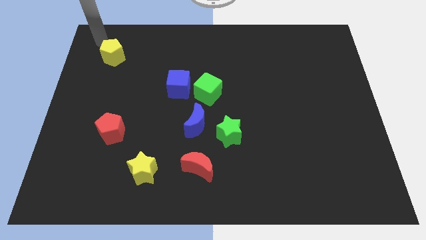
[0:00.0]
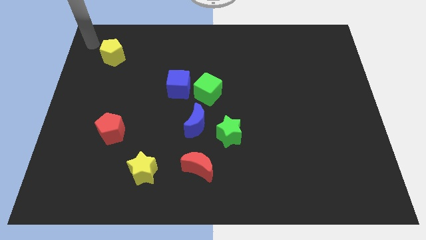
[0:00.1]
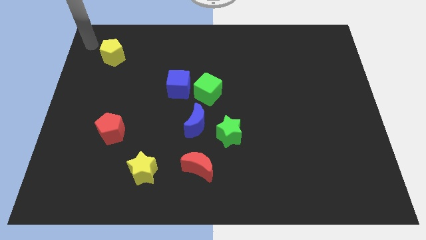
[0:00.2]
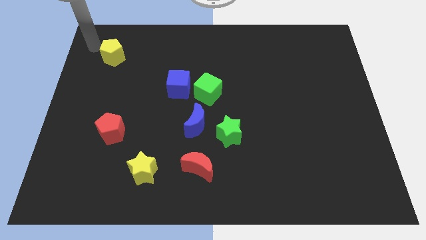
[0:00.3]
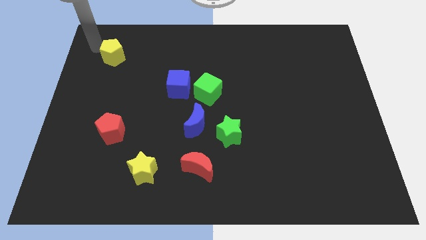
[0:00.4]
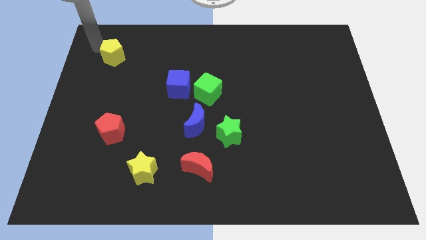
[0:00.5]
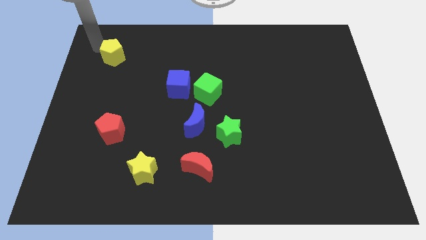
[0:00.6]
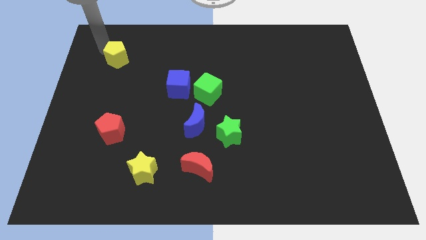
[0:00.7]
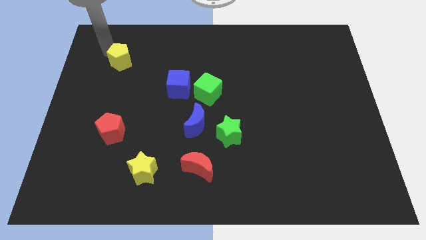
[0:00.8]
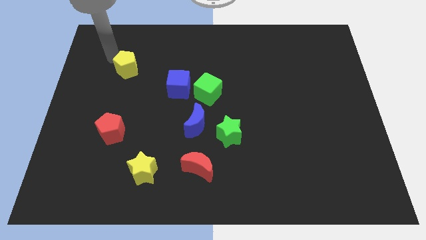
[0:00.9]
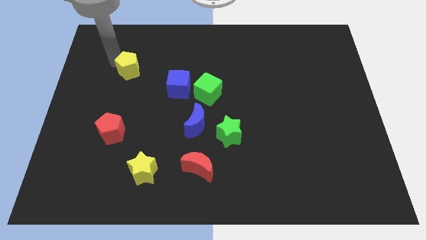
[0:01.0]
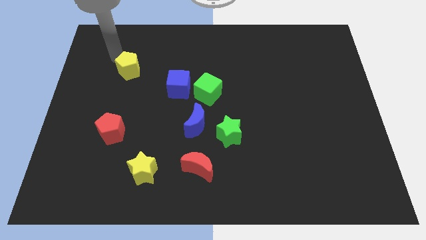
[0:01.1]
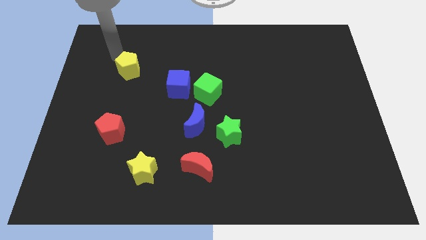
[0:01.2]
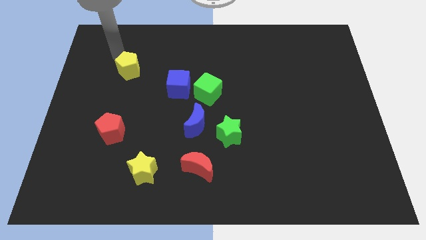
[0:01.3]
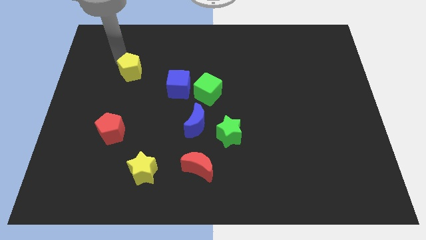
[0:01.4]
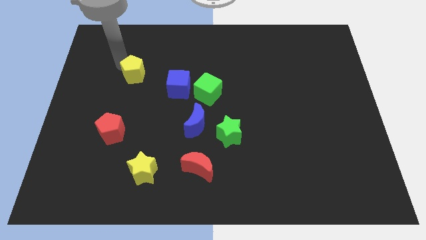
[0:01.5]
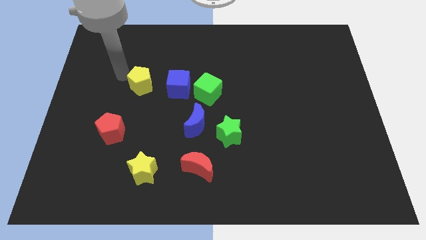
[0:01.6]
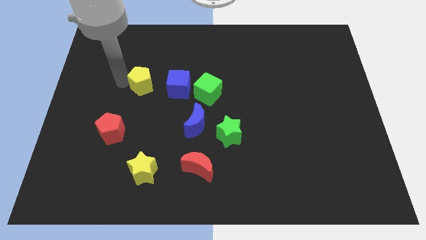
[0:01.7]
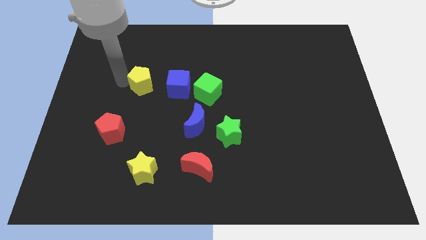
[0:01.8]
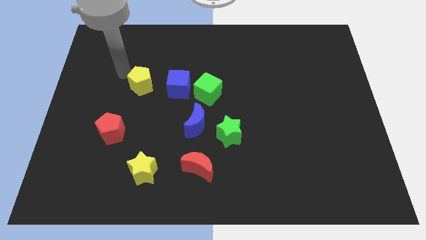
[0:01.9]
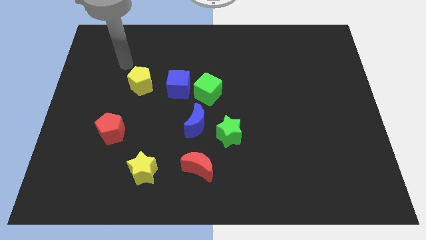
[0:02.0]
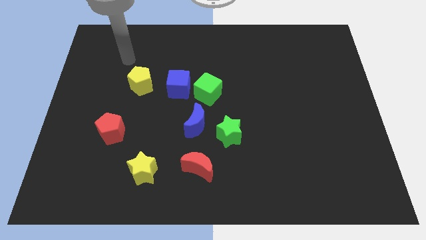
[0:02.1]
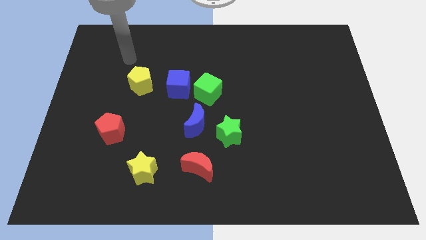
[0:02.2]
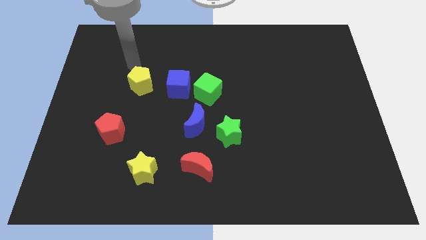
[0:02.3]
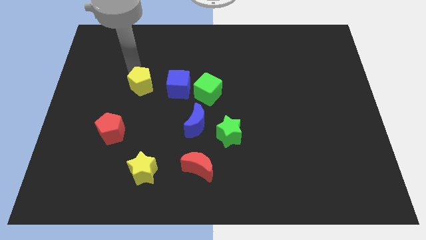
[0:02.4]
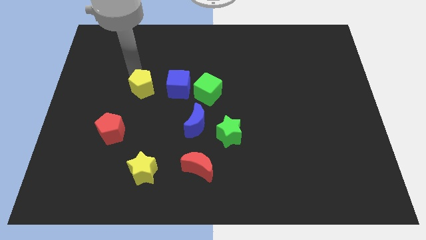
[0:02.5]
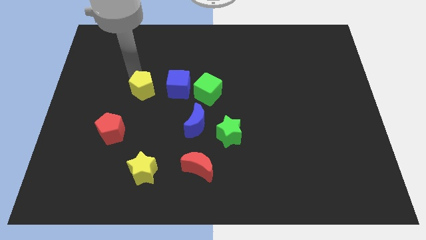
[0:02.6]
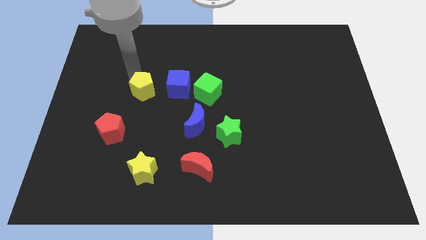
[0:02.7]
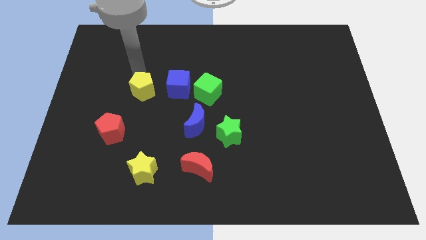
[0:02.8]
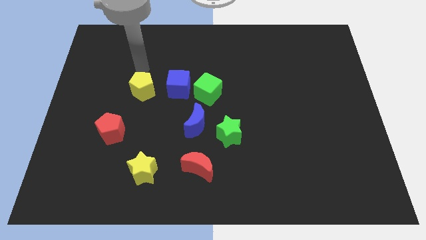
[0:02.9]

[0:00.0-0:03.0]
move the yellow pentagon to the left side of the blue cube on the board

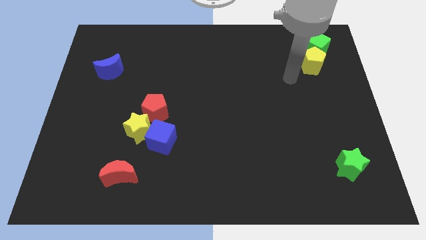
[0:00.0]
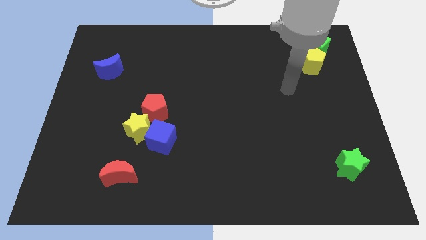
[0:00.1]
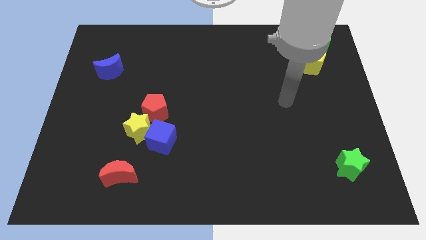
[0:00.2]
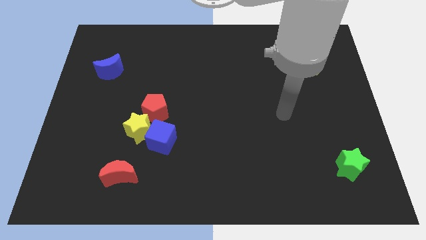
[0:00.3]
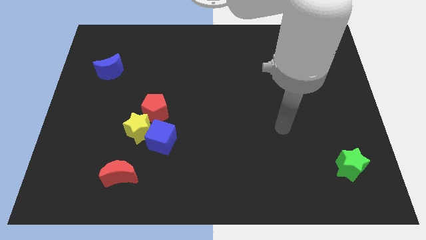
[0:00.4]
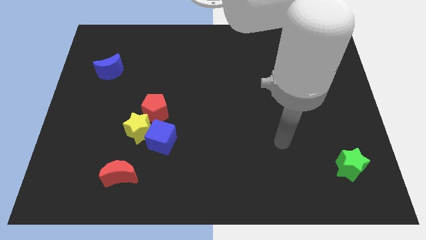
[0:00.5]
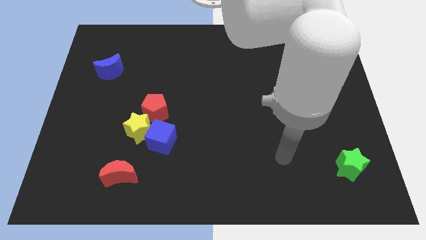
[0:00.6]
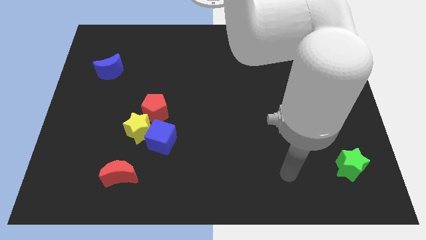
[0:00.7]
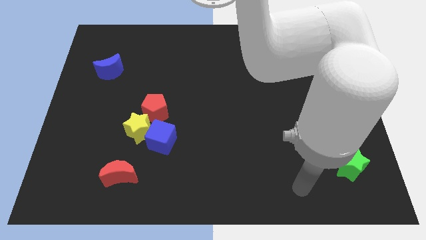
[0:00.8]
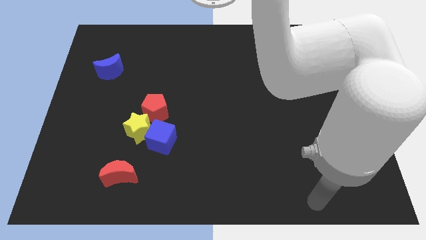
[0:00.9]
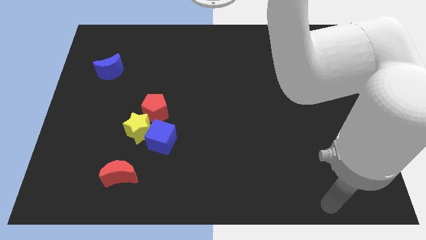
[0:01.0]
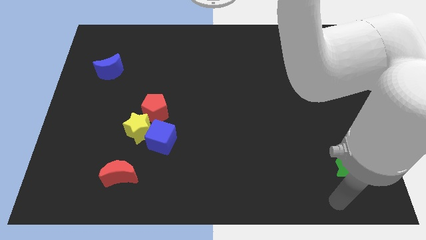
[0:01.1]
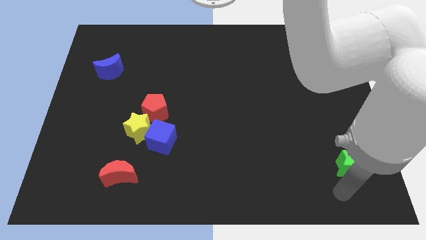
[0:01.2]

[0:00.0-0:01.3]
move your arm to the bottom left to the green star

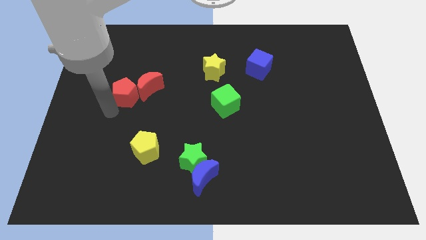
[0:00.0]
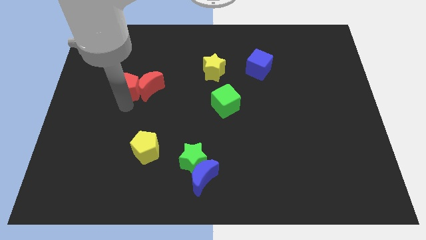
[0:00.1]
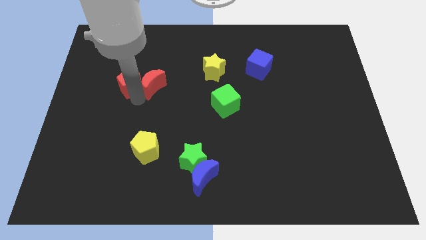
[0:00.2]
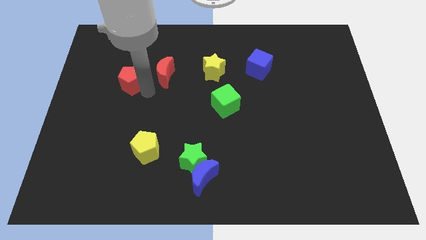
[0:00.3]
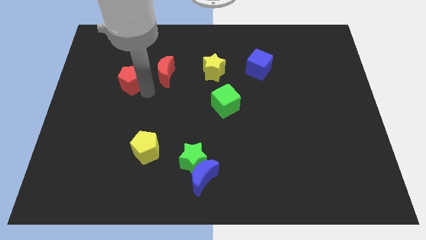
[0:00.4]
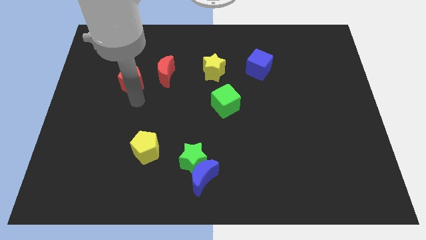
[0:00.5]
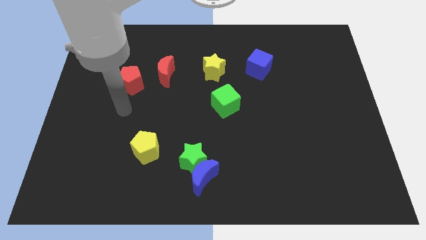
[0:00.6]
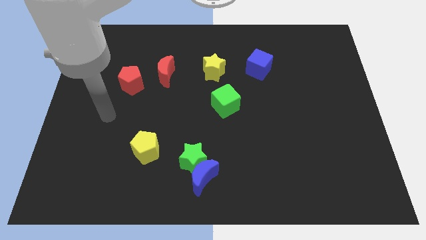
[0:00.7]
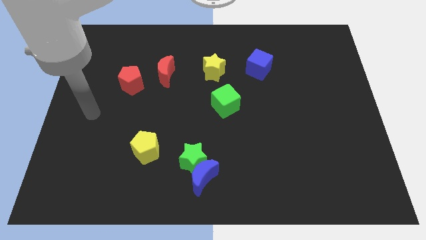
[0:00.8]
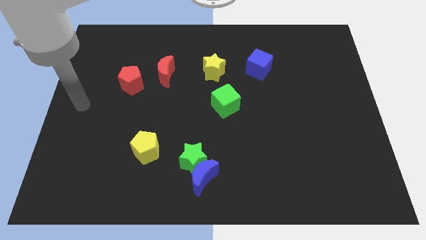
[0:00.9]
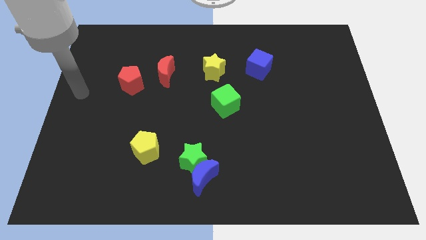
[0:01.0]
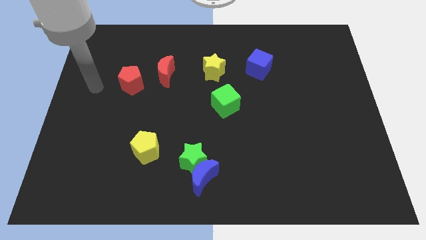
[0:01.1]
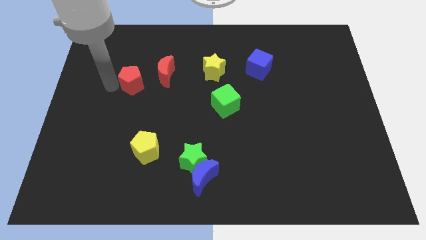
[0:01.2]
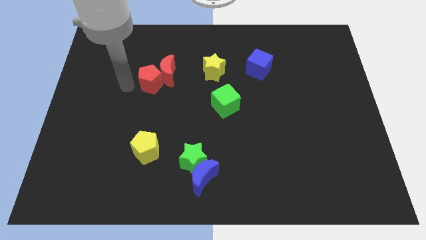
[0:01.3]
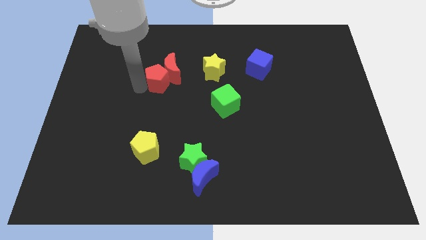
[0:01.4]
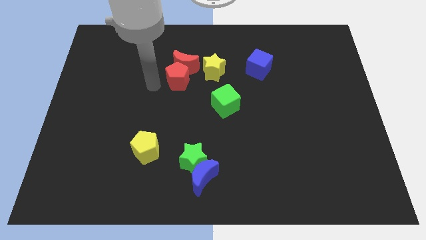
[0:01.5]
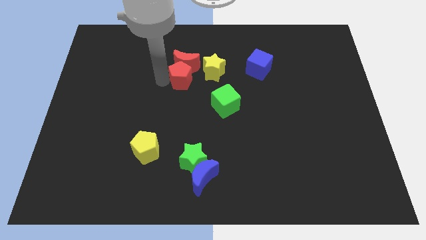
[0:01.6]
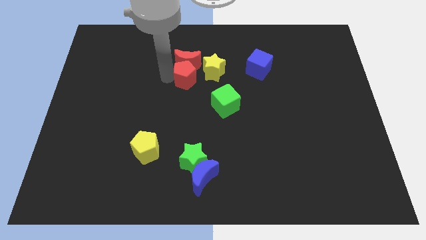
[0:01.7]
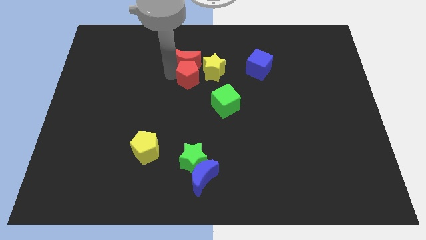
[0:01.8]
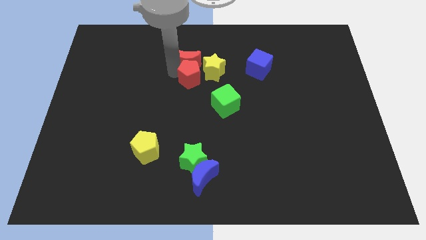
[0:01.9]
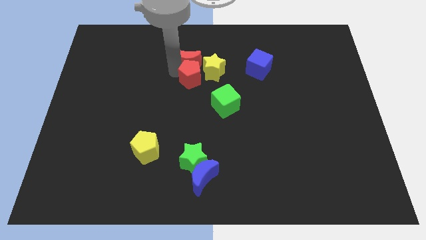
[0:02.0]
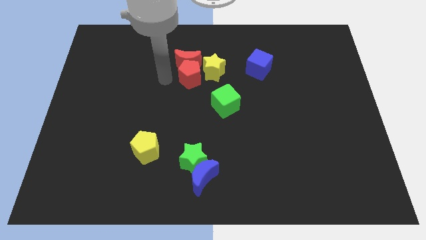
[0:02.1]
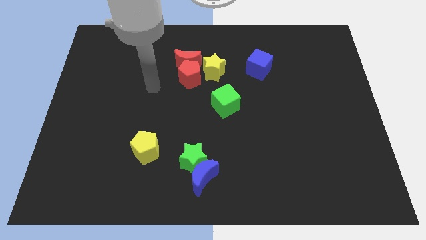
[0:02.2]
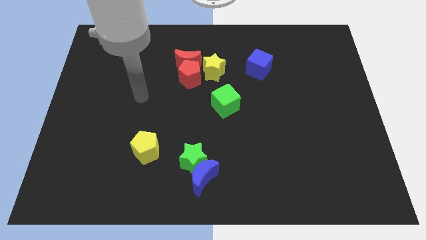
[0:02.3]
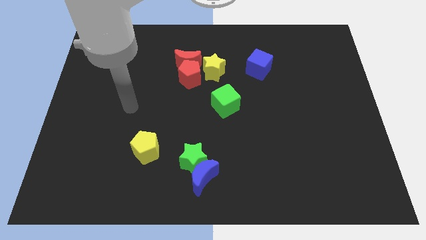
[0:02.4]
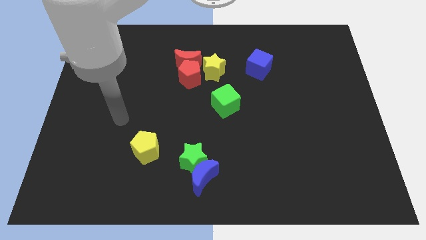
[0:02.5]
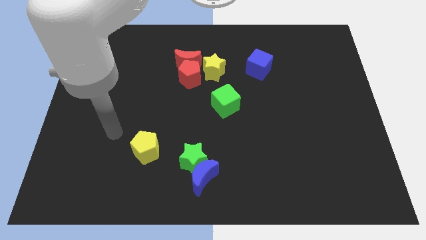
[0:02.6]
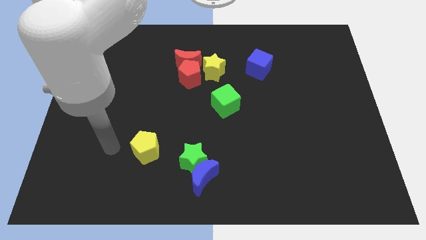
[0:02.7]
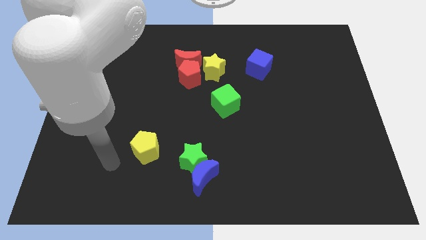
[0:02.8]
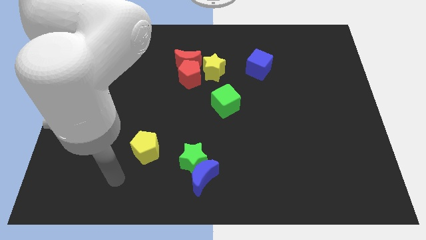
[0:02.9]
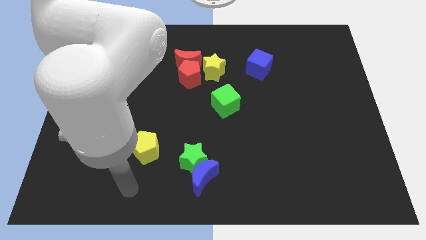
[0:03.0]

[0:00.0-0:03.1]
push the group of red blocks close to the left side of the yellow star

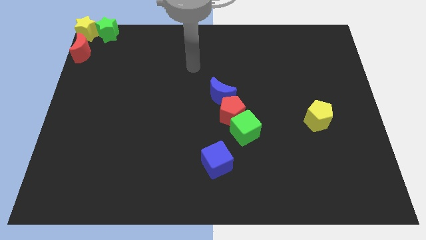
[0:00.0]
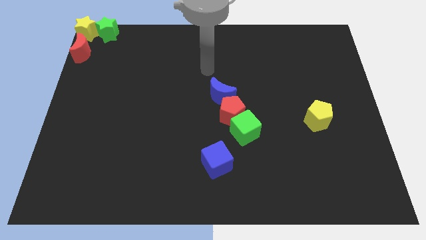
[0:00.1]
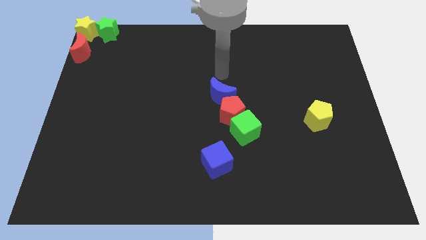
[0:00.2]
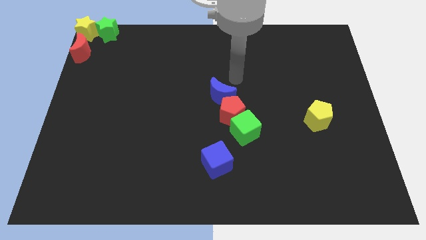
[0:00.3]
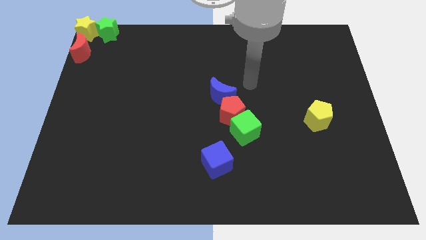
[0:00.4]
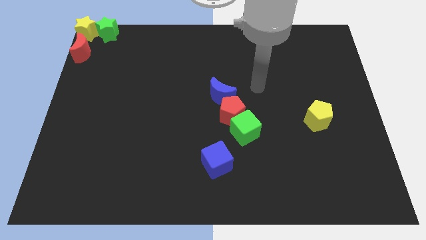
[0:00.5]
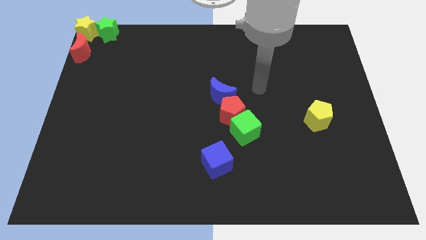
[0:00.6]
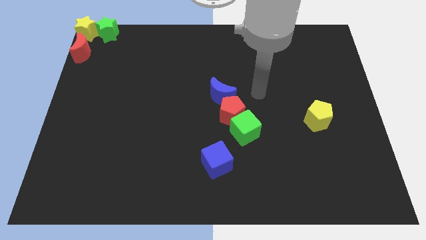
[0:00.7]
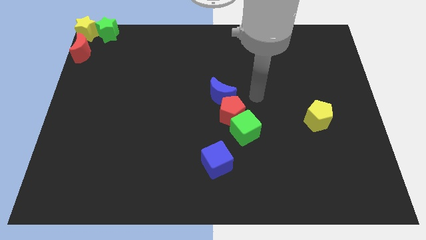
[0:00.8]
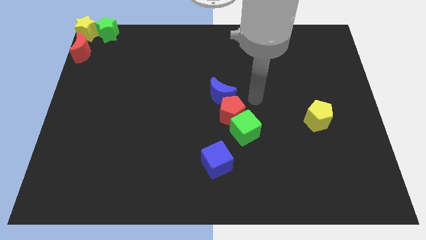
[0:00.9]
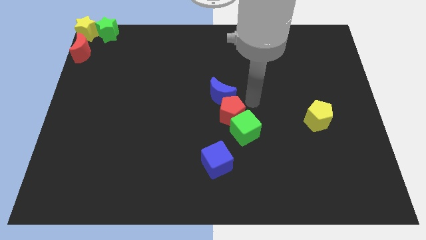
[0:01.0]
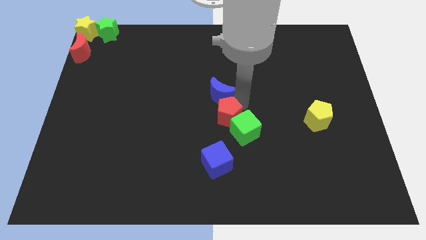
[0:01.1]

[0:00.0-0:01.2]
place the arm to the red pentagon

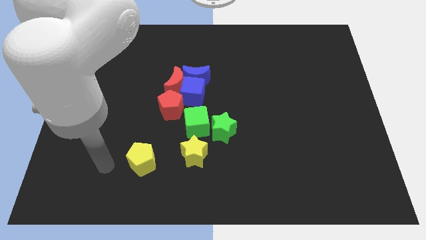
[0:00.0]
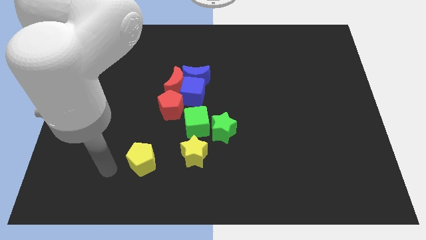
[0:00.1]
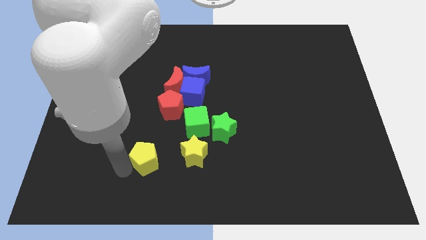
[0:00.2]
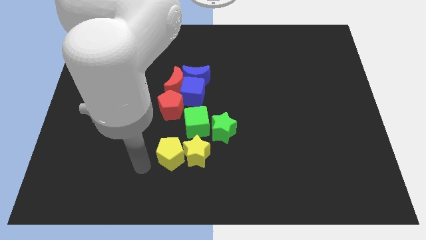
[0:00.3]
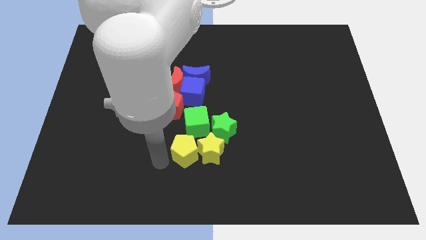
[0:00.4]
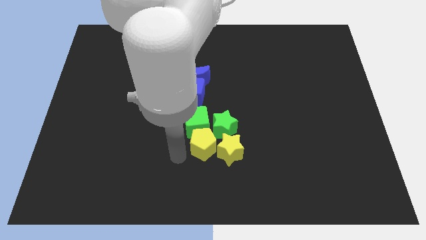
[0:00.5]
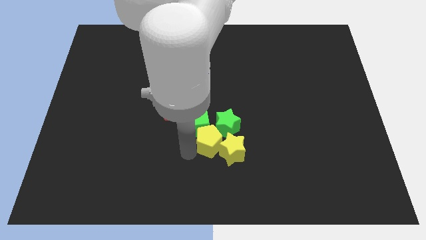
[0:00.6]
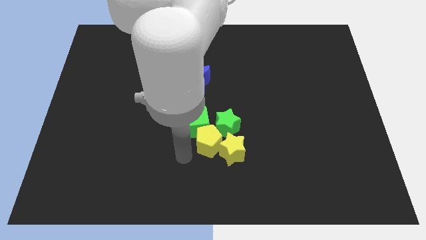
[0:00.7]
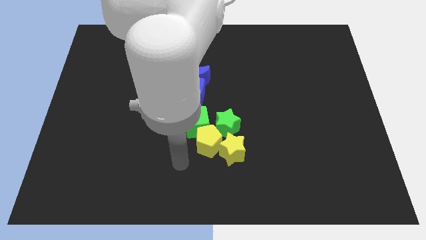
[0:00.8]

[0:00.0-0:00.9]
push the yellow pentagon to the left of the yellow star
